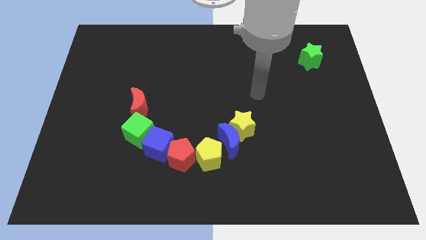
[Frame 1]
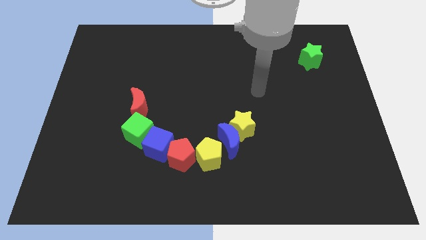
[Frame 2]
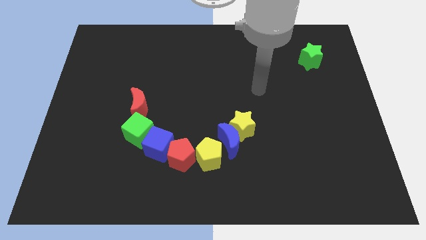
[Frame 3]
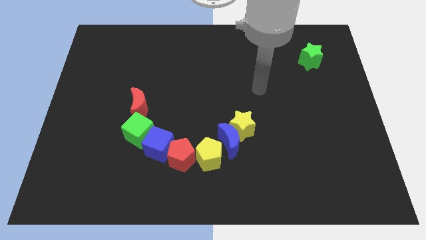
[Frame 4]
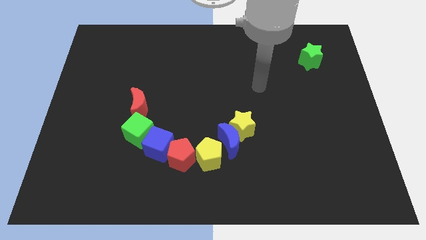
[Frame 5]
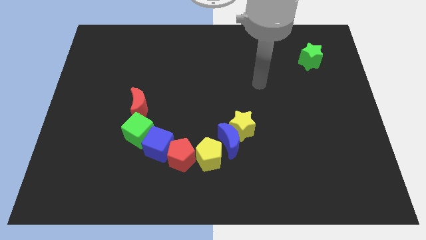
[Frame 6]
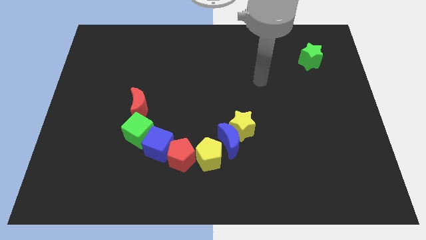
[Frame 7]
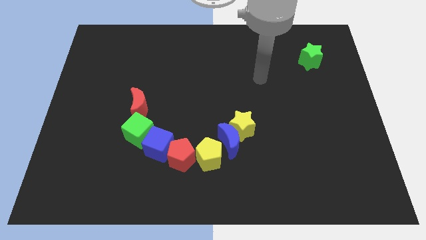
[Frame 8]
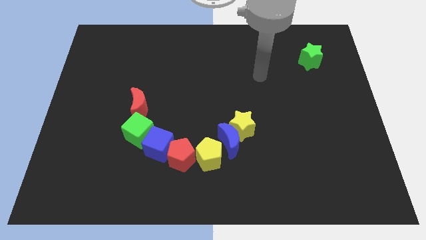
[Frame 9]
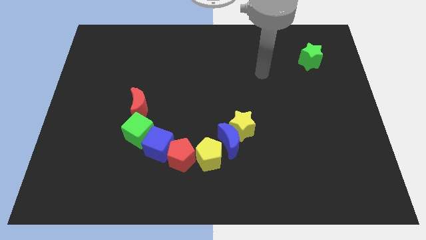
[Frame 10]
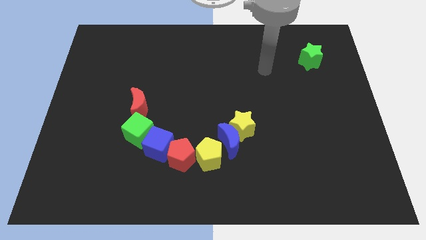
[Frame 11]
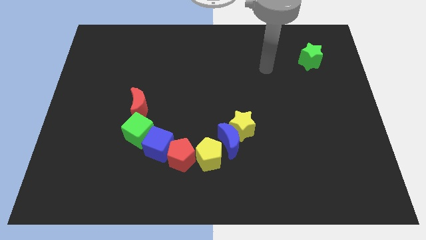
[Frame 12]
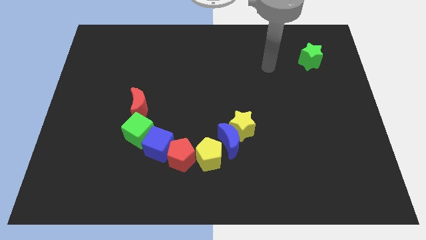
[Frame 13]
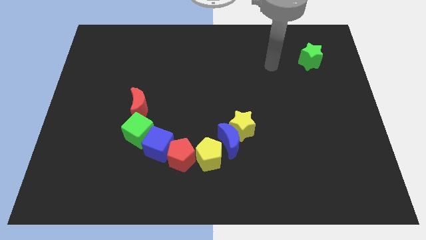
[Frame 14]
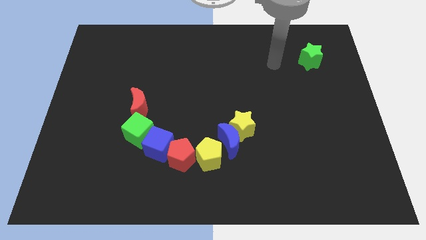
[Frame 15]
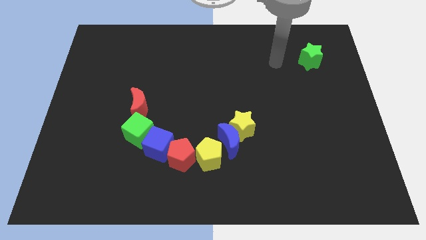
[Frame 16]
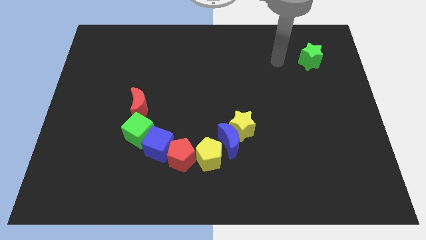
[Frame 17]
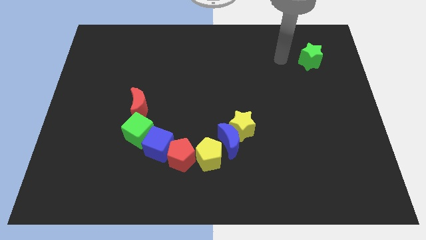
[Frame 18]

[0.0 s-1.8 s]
move your hand to the left of the green star

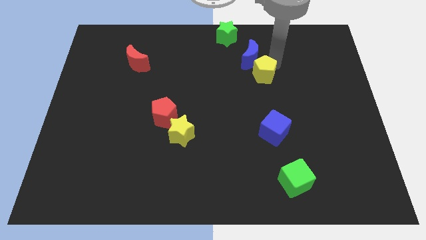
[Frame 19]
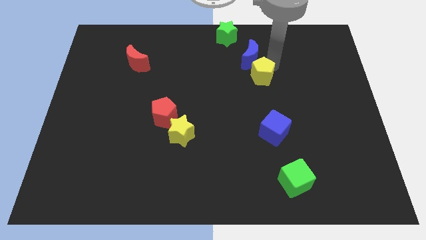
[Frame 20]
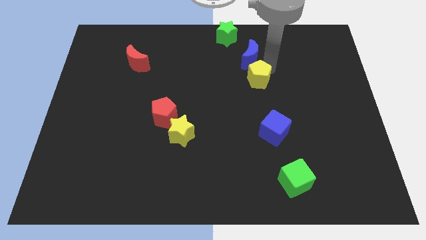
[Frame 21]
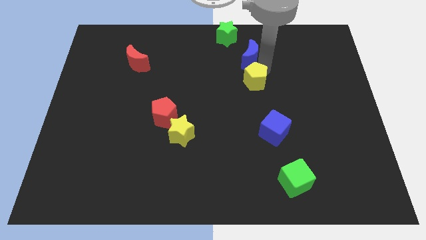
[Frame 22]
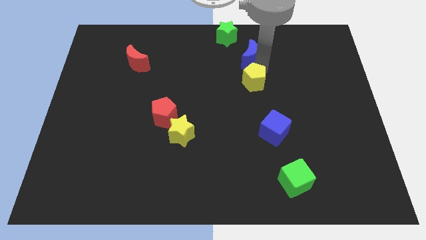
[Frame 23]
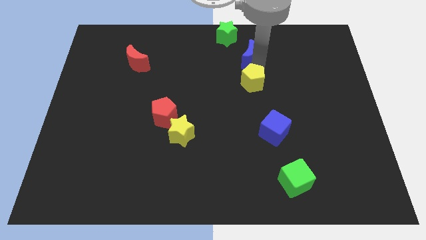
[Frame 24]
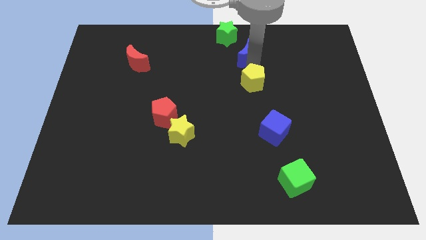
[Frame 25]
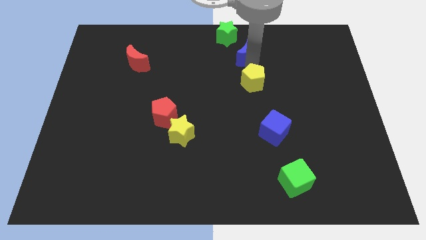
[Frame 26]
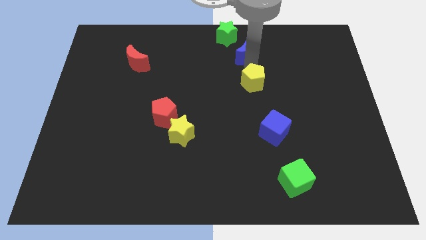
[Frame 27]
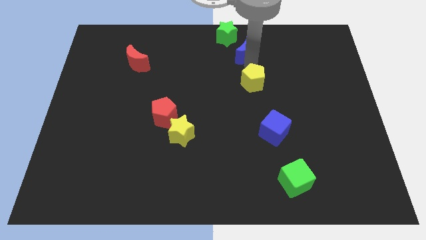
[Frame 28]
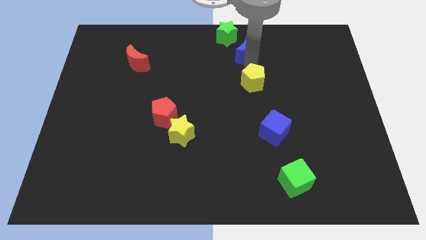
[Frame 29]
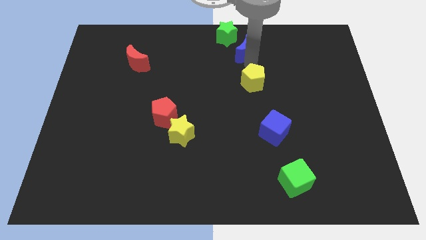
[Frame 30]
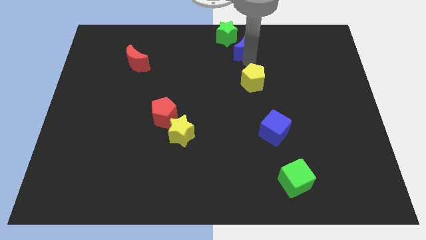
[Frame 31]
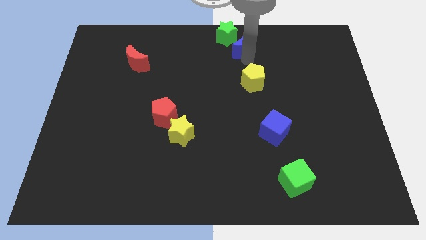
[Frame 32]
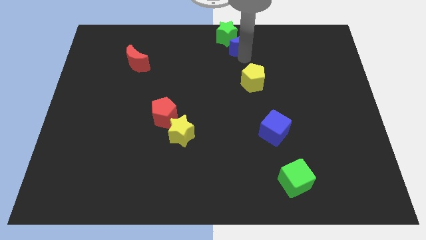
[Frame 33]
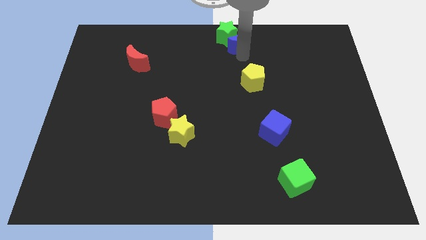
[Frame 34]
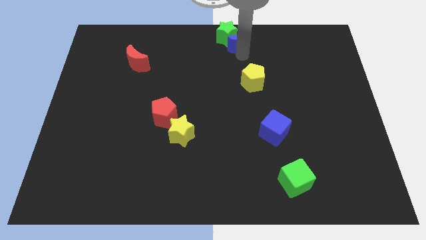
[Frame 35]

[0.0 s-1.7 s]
move the blue crescent below the green star

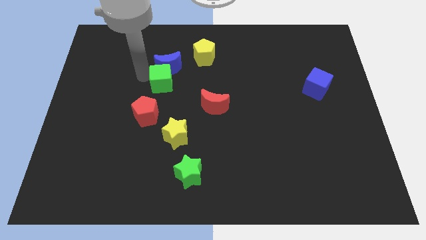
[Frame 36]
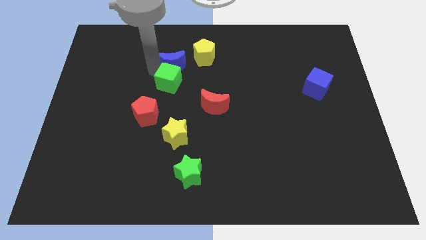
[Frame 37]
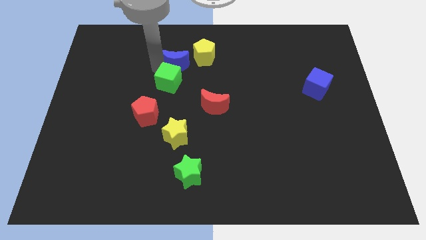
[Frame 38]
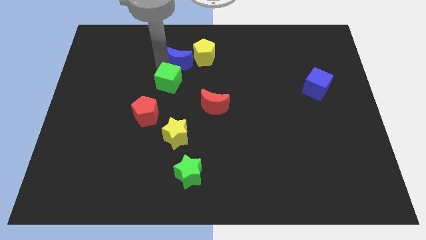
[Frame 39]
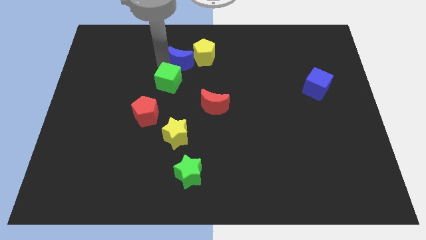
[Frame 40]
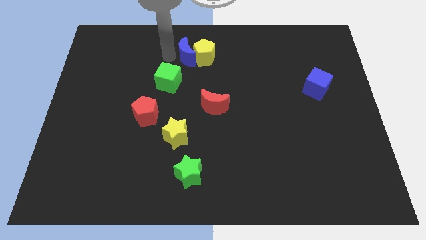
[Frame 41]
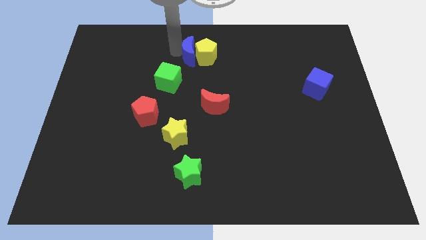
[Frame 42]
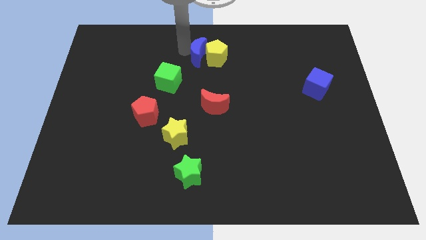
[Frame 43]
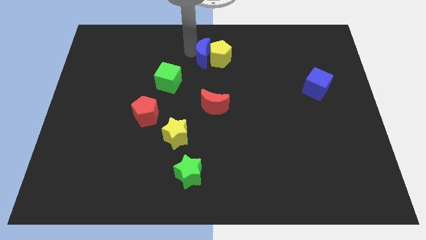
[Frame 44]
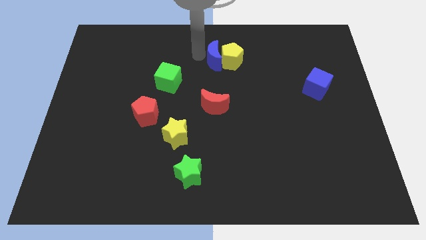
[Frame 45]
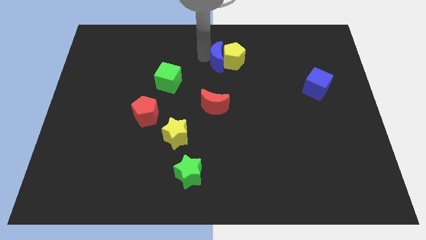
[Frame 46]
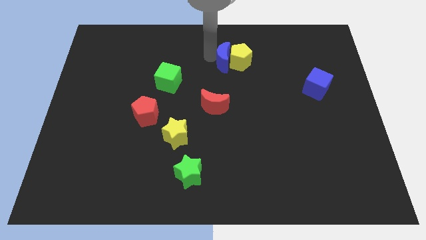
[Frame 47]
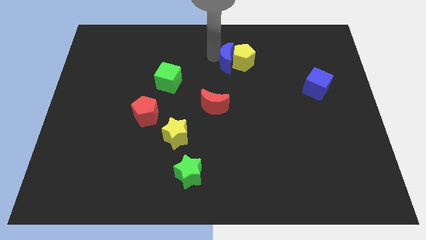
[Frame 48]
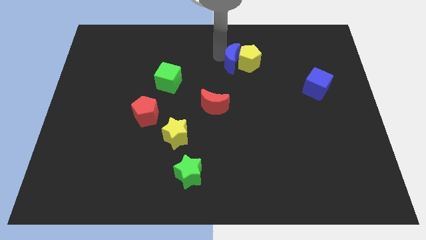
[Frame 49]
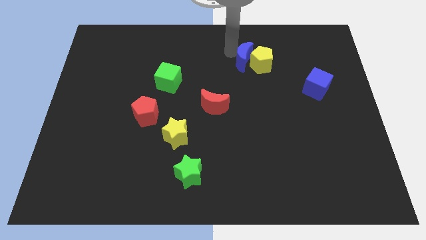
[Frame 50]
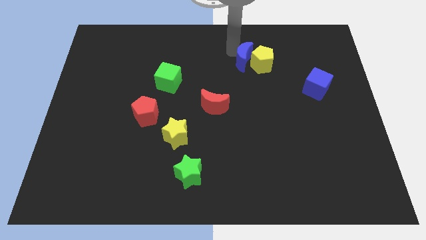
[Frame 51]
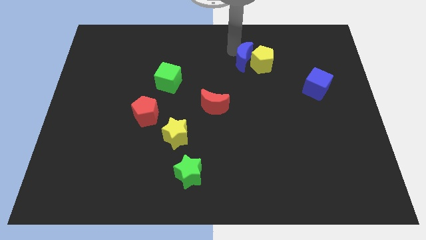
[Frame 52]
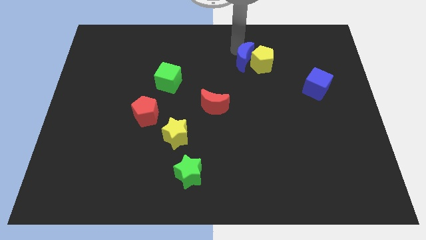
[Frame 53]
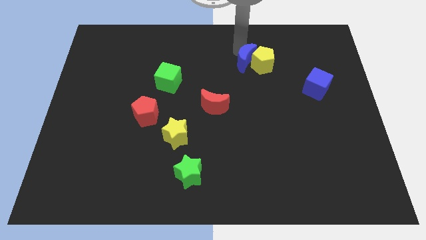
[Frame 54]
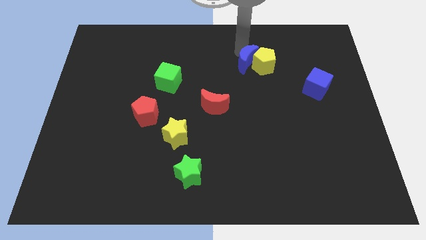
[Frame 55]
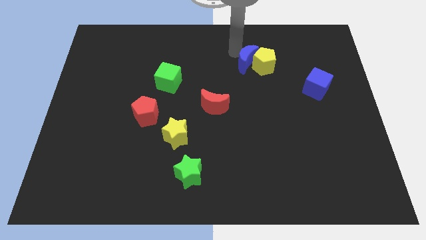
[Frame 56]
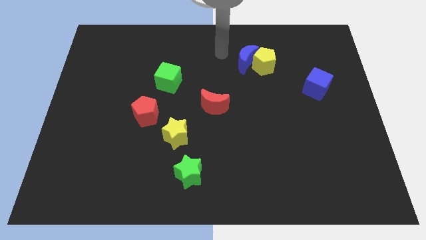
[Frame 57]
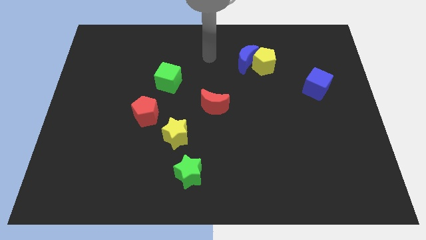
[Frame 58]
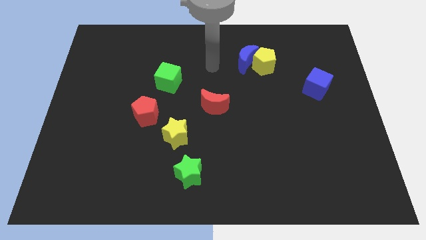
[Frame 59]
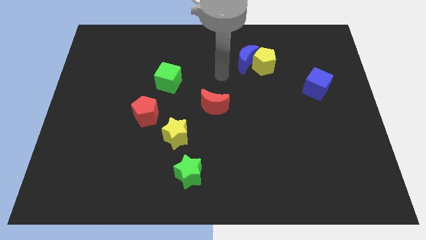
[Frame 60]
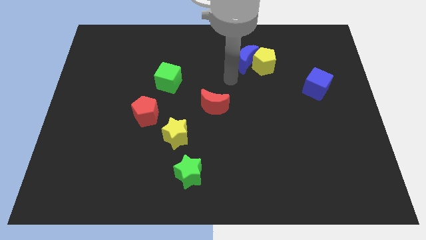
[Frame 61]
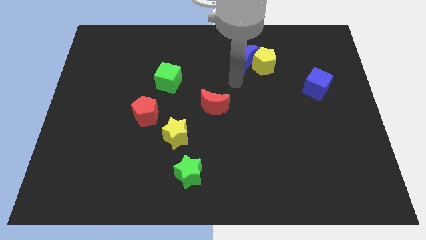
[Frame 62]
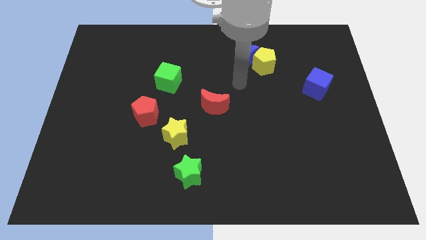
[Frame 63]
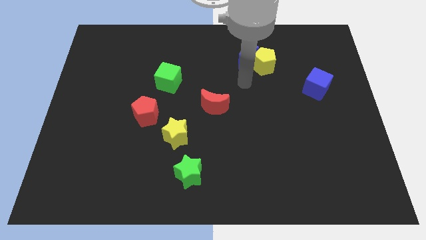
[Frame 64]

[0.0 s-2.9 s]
move yellow pentagon and blue moon slightly right

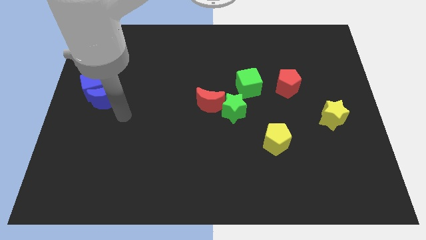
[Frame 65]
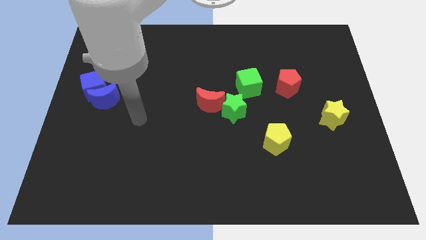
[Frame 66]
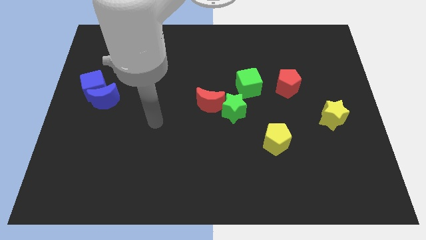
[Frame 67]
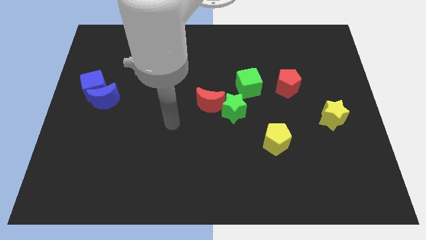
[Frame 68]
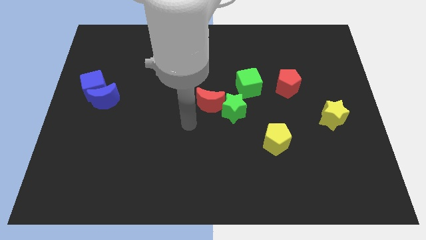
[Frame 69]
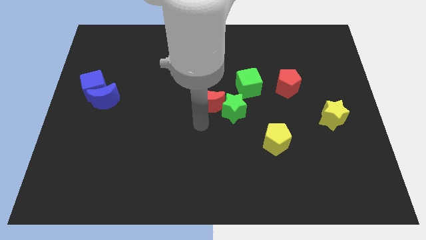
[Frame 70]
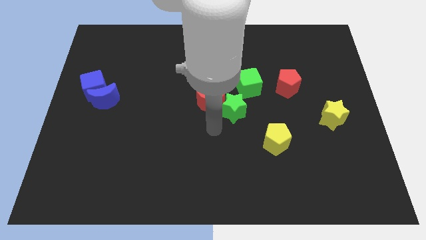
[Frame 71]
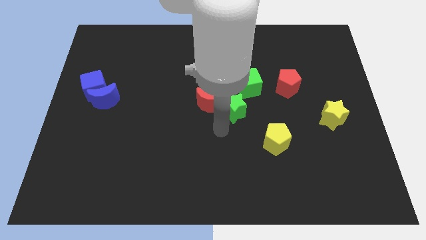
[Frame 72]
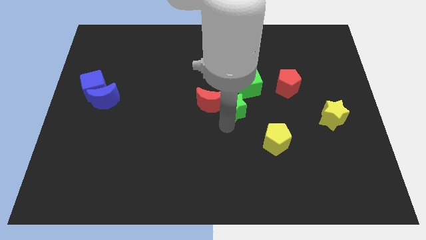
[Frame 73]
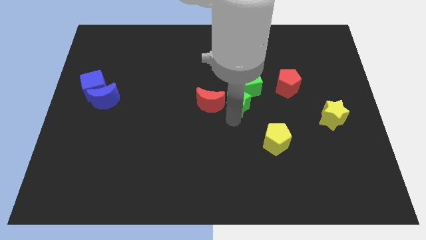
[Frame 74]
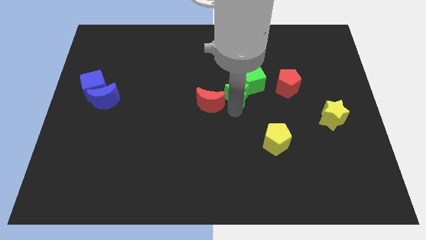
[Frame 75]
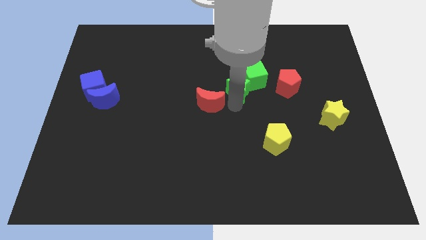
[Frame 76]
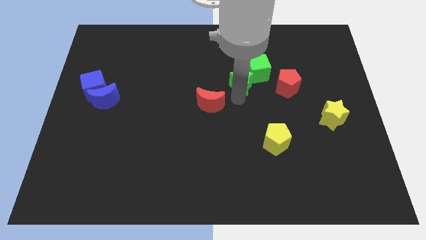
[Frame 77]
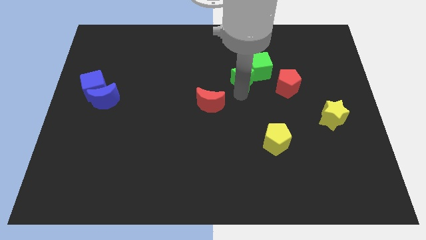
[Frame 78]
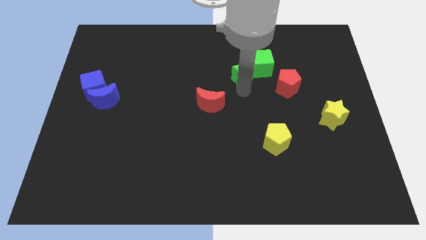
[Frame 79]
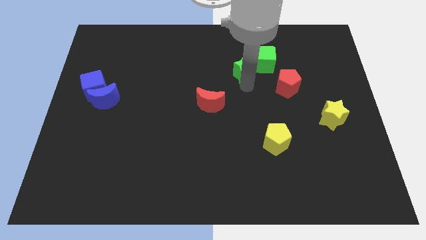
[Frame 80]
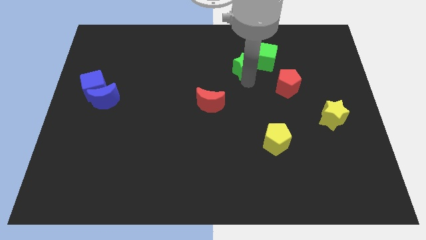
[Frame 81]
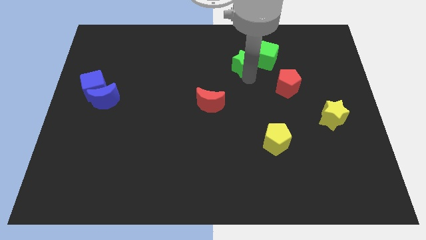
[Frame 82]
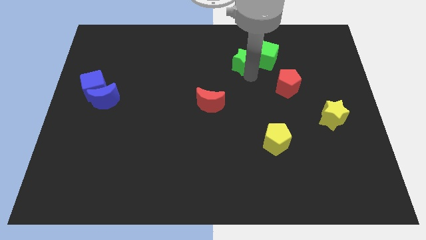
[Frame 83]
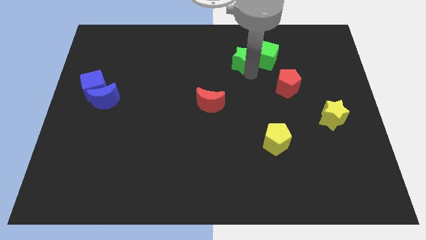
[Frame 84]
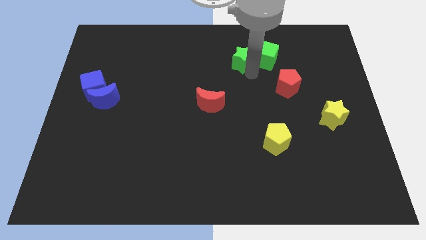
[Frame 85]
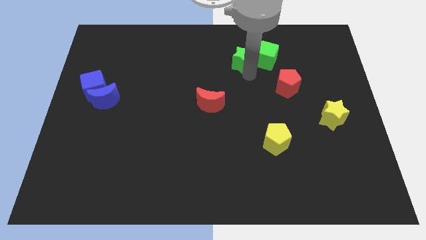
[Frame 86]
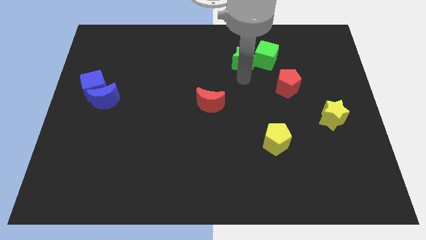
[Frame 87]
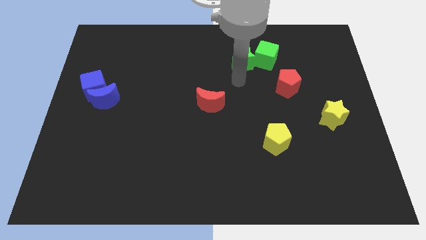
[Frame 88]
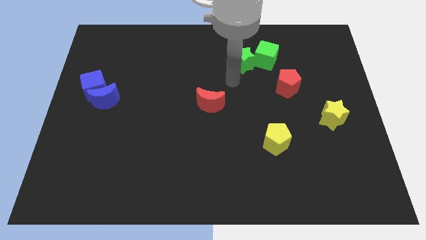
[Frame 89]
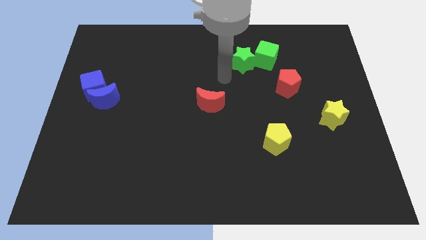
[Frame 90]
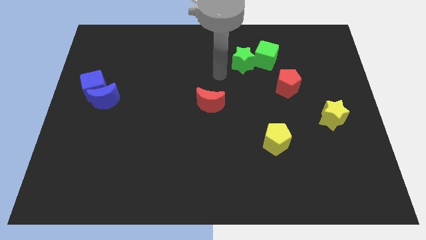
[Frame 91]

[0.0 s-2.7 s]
push the green star into the green cube
